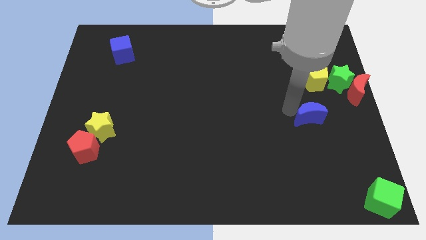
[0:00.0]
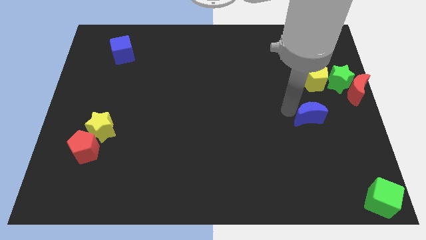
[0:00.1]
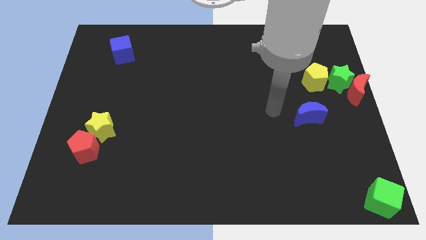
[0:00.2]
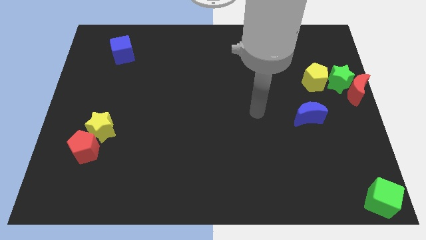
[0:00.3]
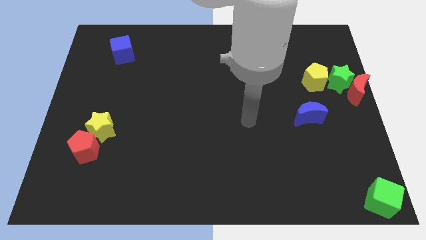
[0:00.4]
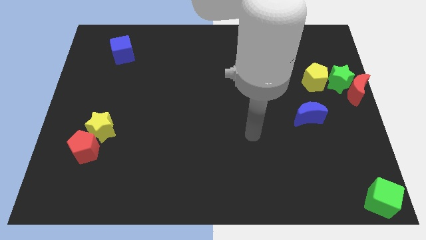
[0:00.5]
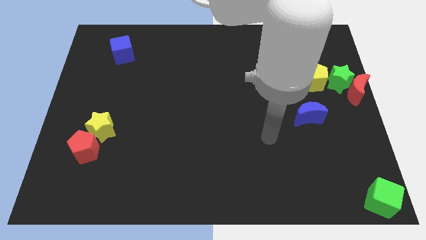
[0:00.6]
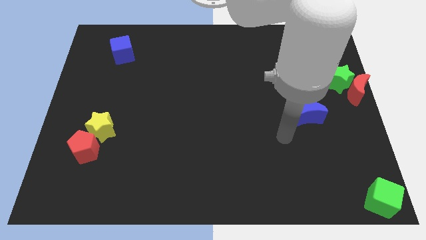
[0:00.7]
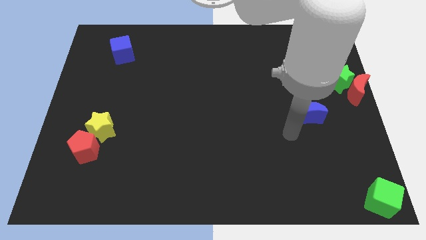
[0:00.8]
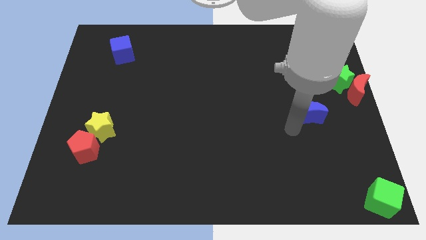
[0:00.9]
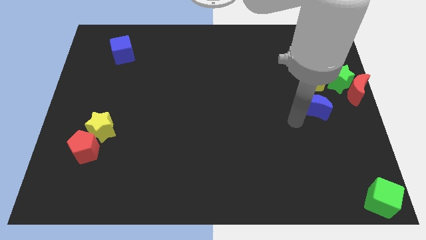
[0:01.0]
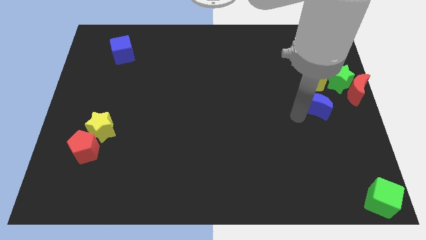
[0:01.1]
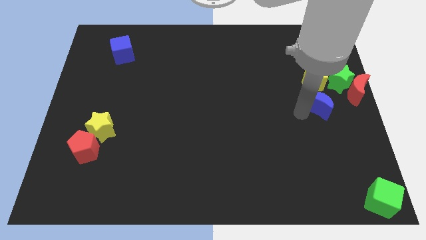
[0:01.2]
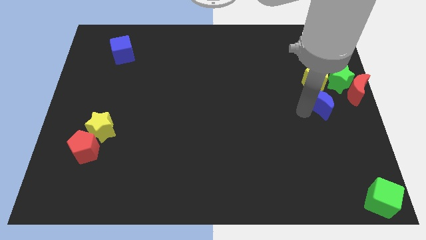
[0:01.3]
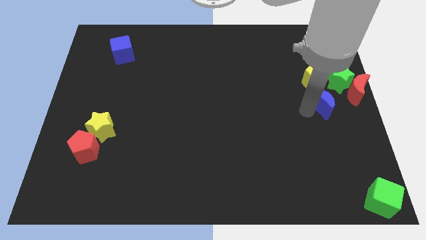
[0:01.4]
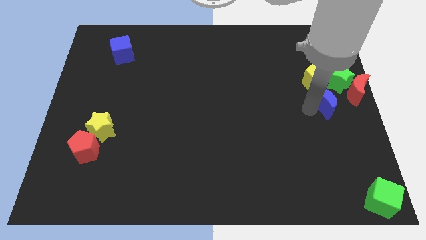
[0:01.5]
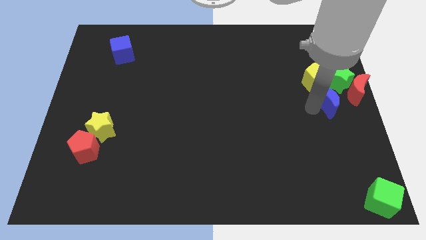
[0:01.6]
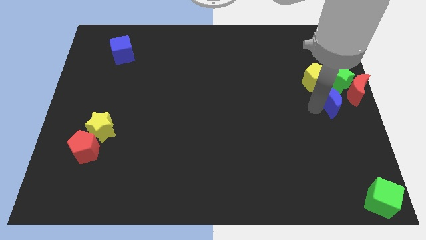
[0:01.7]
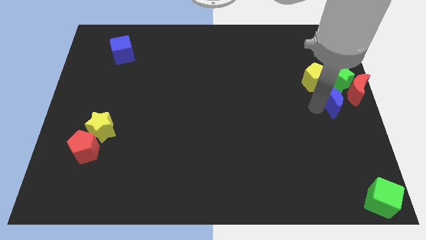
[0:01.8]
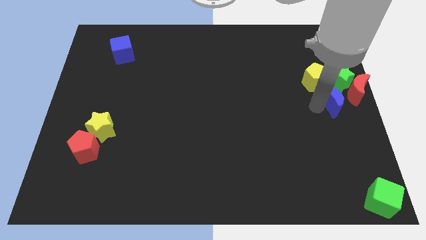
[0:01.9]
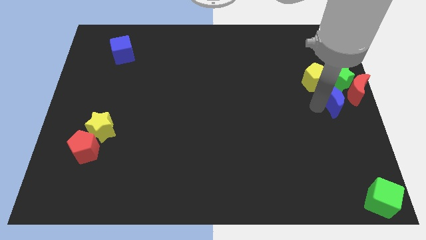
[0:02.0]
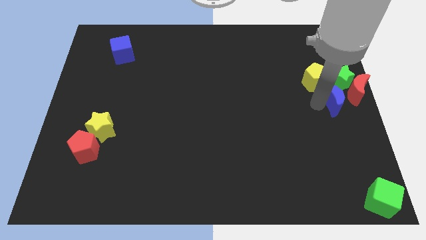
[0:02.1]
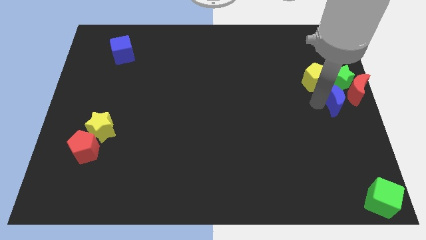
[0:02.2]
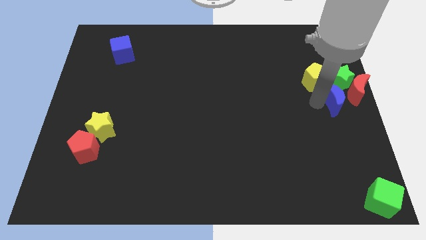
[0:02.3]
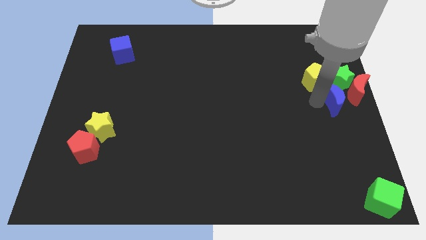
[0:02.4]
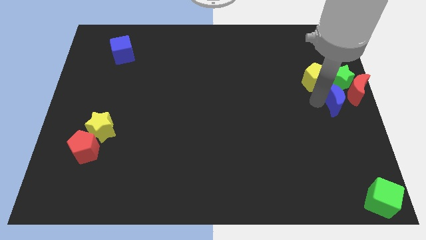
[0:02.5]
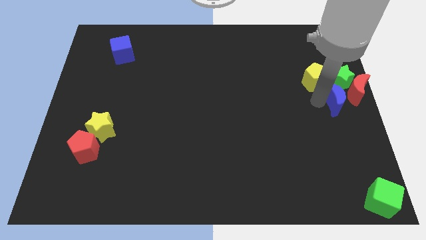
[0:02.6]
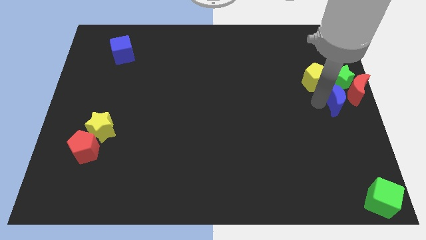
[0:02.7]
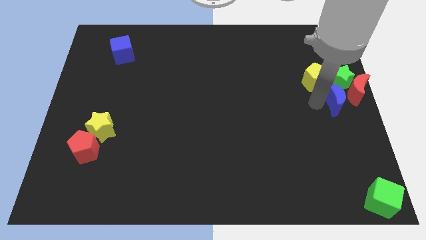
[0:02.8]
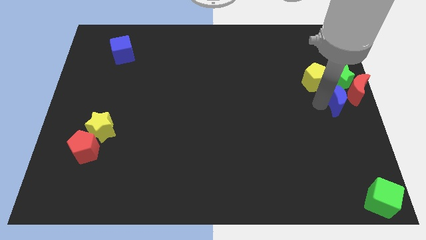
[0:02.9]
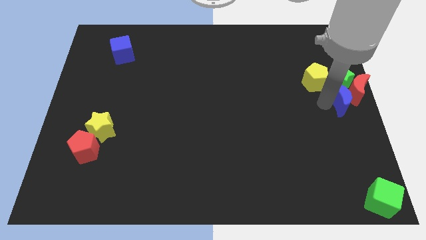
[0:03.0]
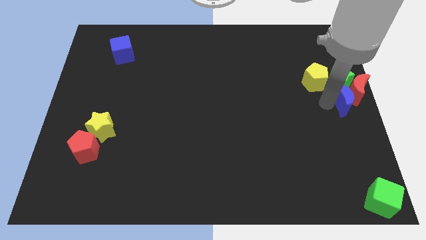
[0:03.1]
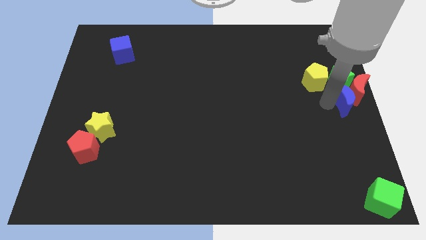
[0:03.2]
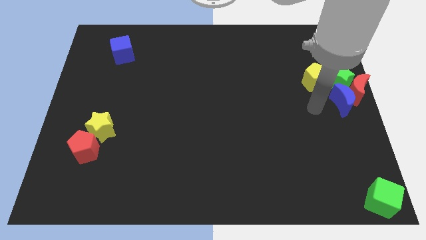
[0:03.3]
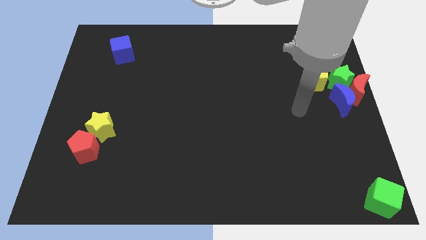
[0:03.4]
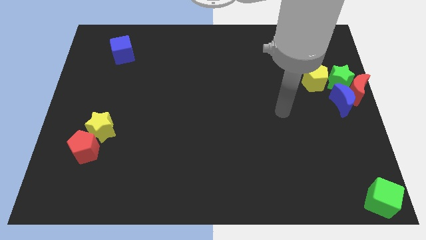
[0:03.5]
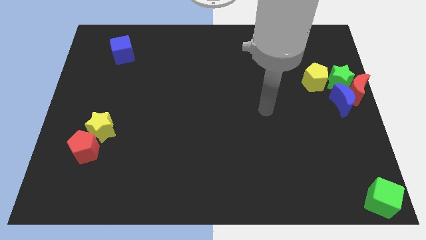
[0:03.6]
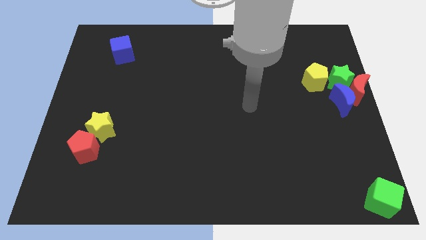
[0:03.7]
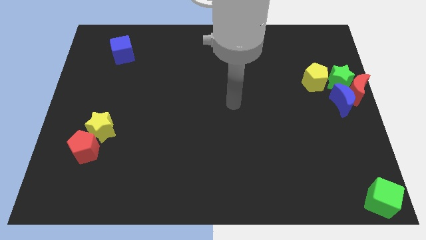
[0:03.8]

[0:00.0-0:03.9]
place blue crescent along with red crescent green star and yellow pentagon

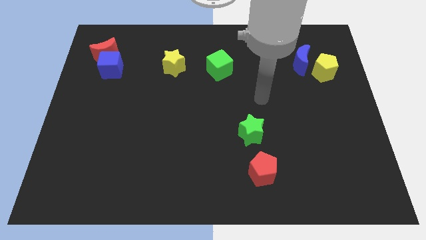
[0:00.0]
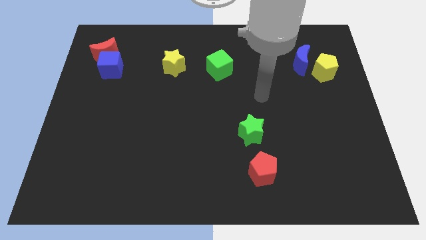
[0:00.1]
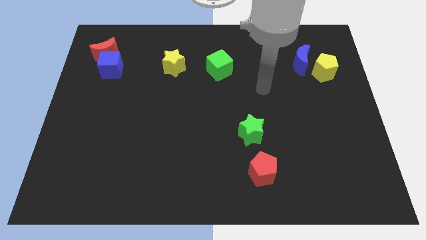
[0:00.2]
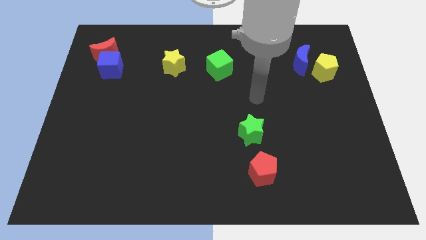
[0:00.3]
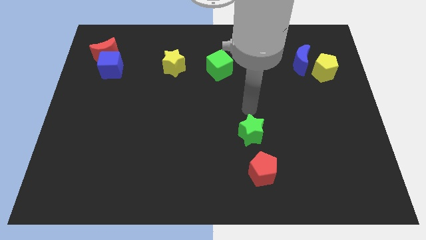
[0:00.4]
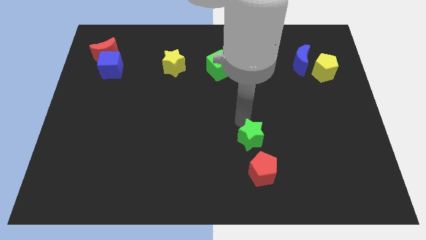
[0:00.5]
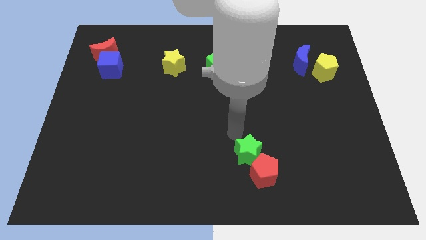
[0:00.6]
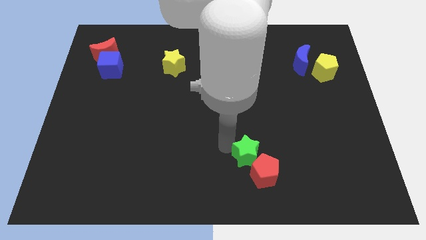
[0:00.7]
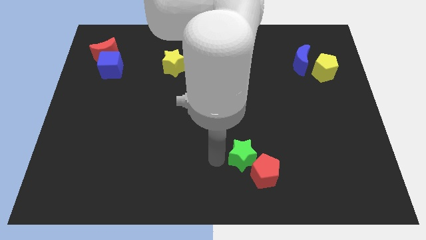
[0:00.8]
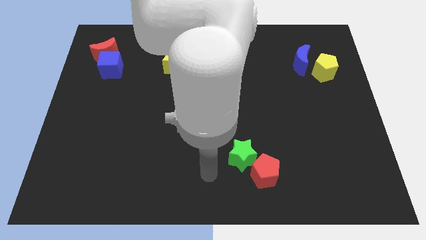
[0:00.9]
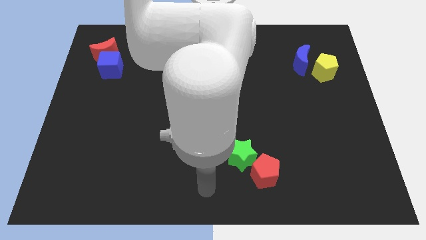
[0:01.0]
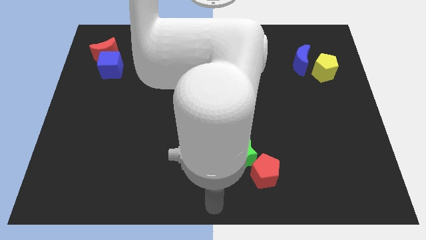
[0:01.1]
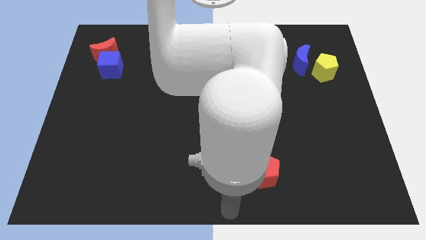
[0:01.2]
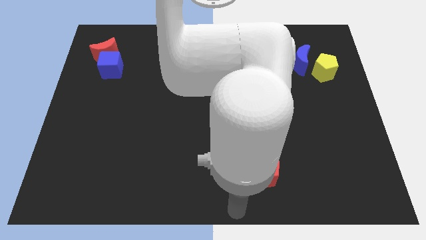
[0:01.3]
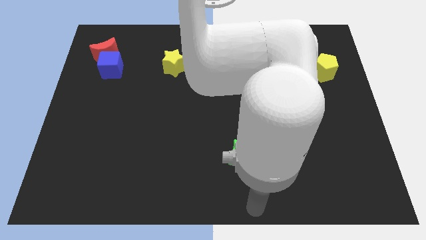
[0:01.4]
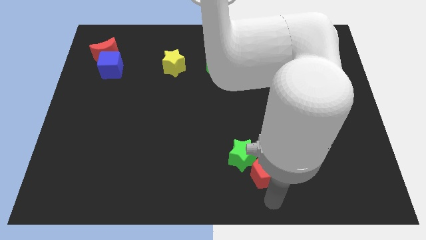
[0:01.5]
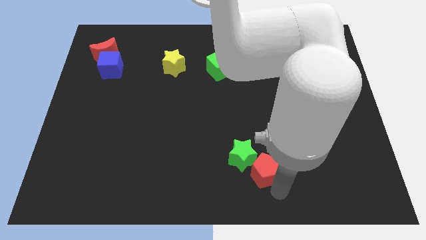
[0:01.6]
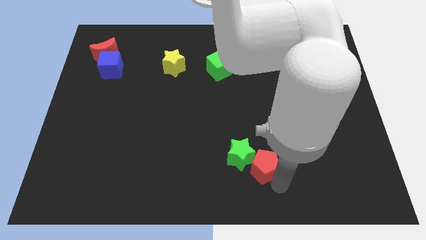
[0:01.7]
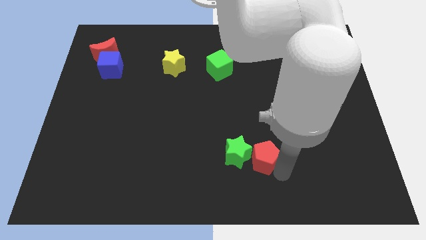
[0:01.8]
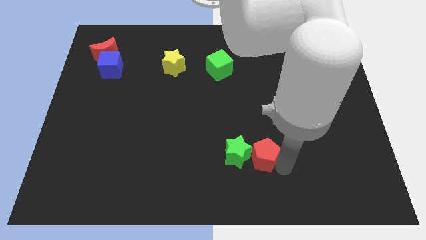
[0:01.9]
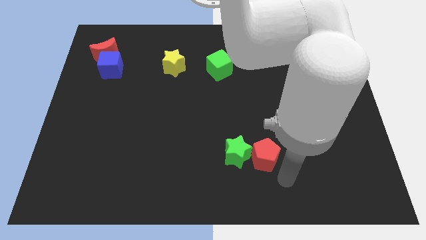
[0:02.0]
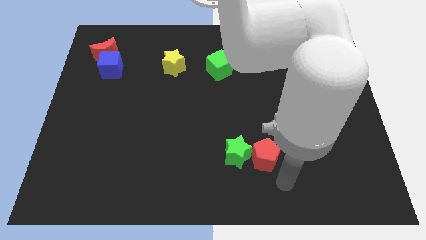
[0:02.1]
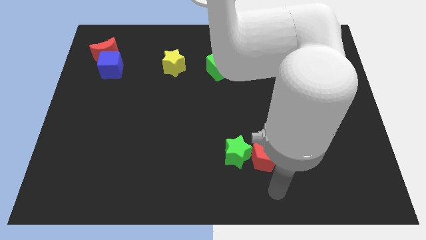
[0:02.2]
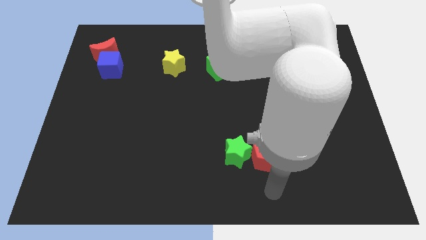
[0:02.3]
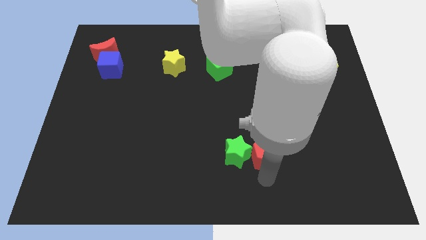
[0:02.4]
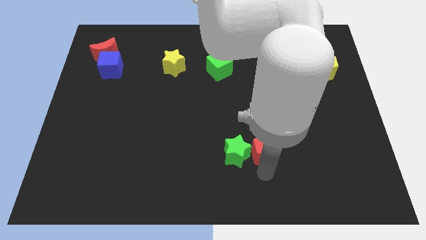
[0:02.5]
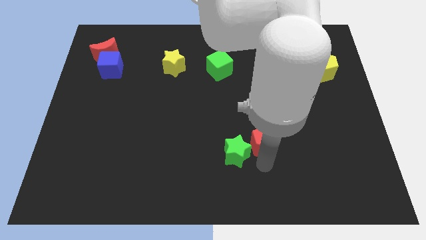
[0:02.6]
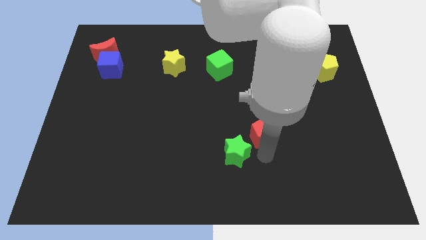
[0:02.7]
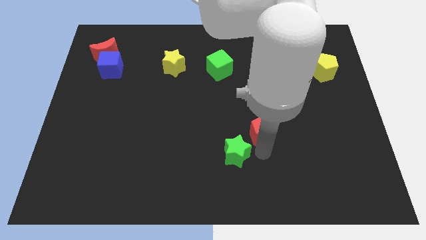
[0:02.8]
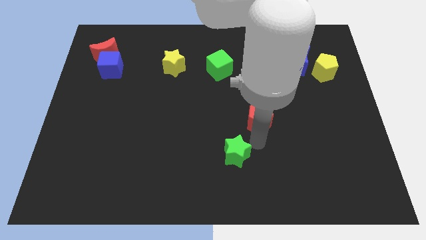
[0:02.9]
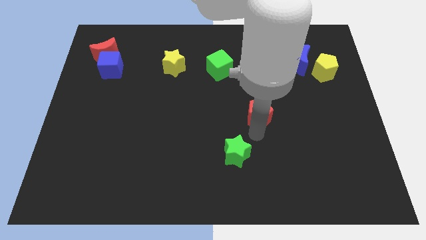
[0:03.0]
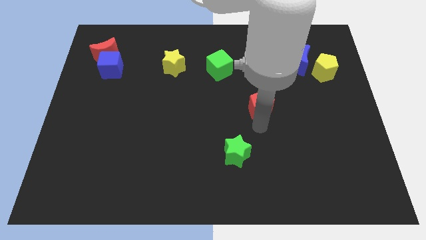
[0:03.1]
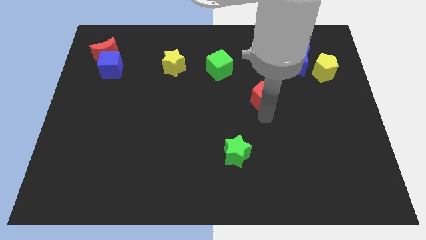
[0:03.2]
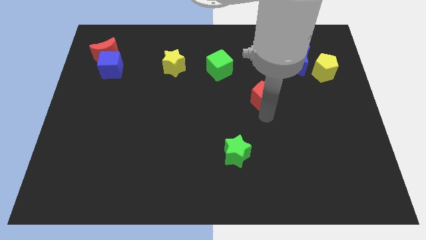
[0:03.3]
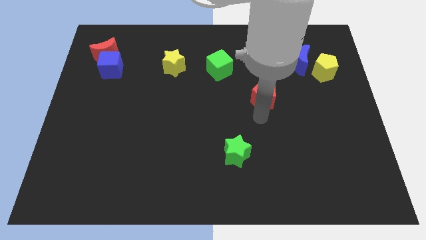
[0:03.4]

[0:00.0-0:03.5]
move the red pentagon slightly up

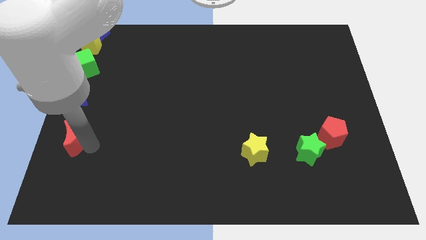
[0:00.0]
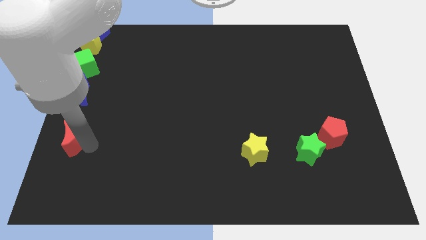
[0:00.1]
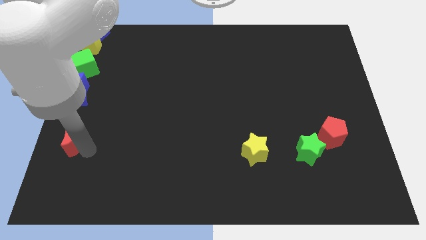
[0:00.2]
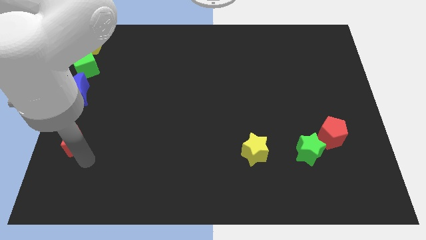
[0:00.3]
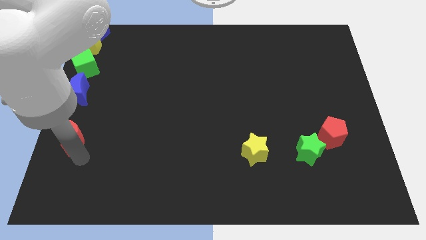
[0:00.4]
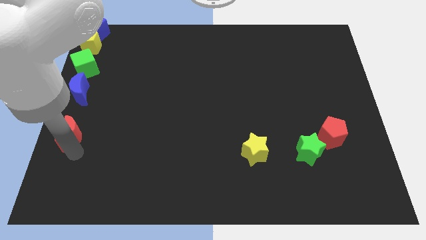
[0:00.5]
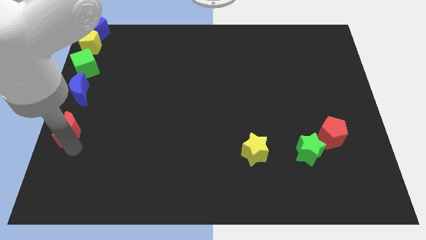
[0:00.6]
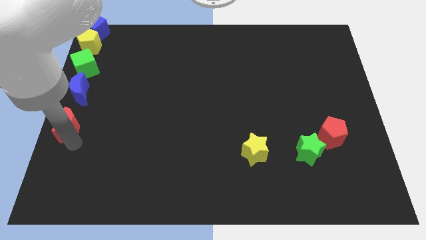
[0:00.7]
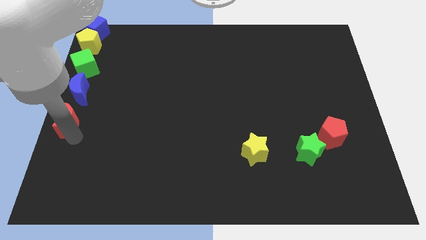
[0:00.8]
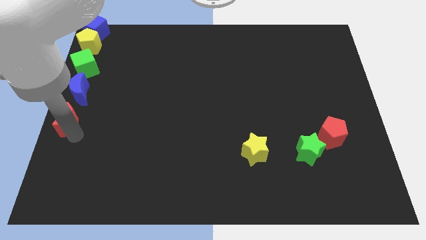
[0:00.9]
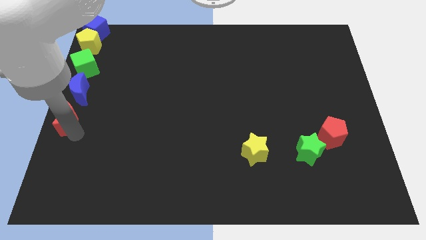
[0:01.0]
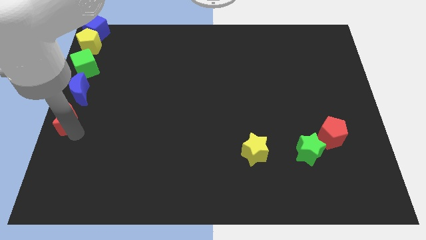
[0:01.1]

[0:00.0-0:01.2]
place the red crescent below the blue crescent

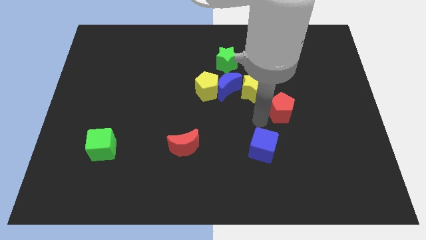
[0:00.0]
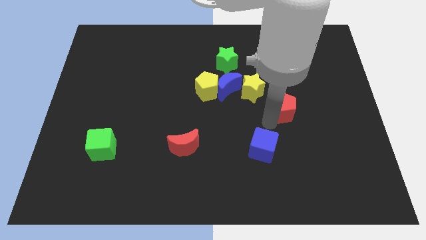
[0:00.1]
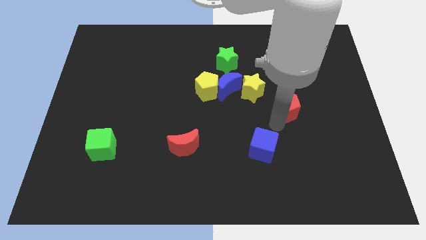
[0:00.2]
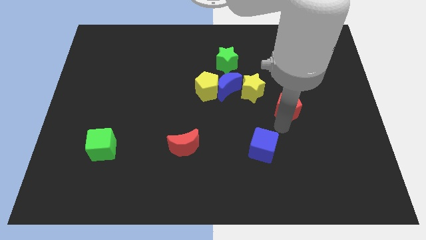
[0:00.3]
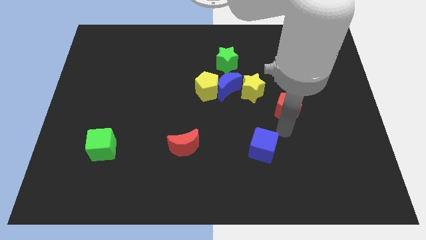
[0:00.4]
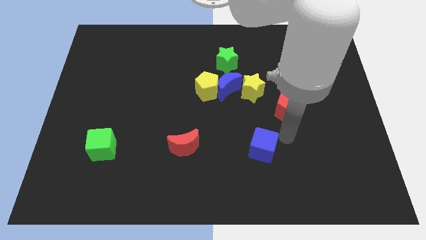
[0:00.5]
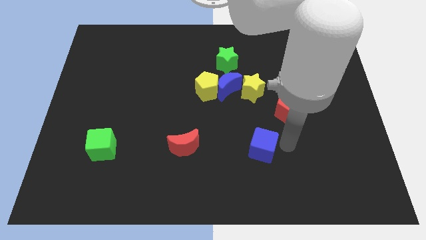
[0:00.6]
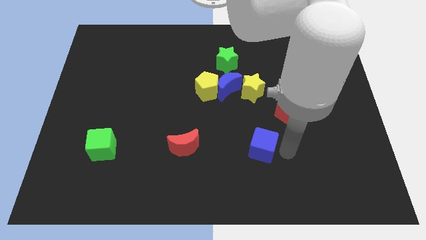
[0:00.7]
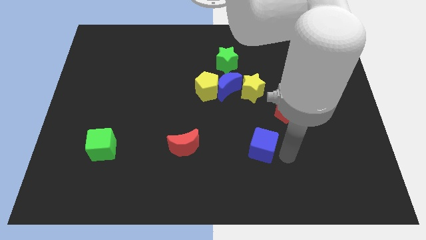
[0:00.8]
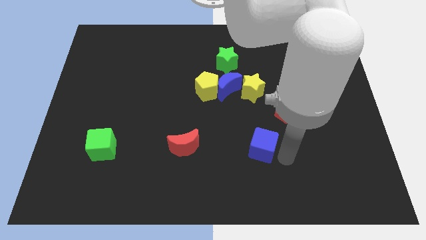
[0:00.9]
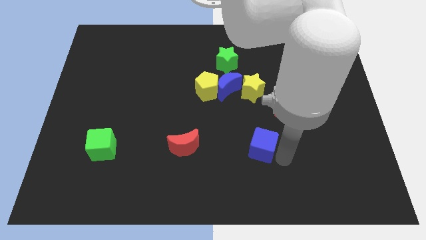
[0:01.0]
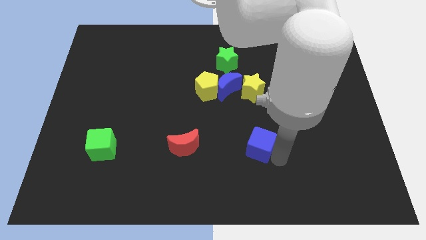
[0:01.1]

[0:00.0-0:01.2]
move the red pentagon slightly towards the right side of the board
